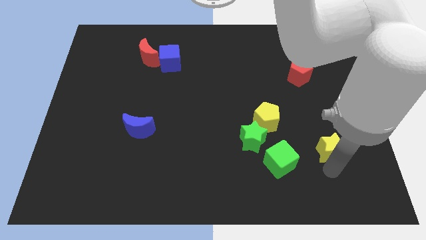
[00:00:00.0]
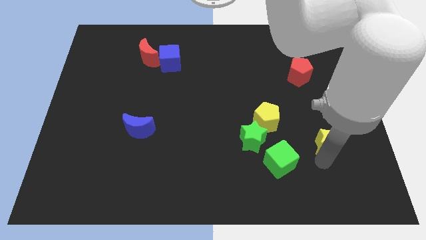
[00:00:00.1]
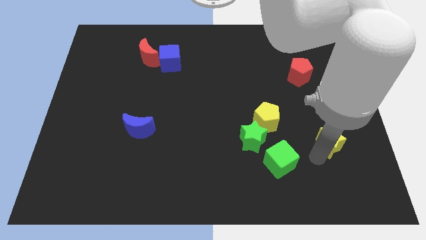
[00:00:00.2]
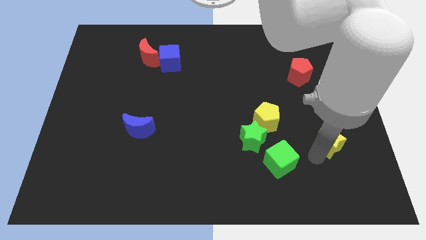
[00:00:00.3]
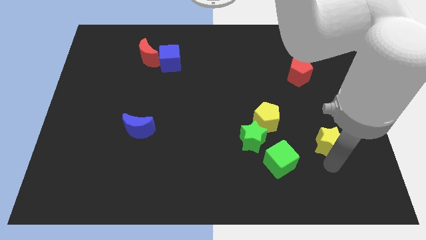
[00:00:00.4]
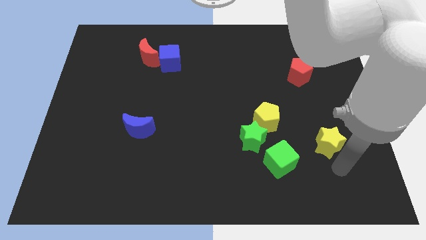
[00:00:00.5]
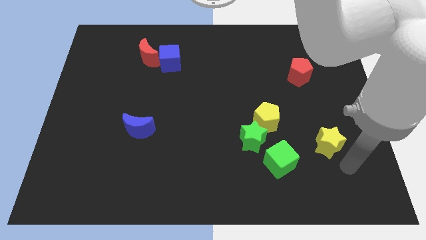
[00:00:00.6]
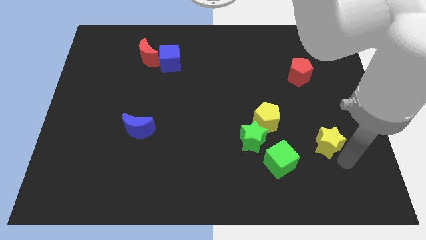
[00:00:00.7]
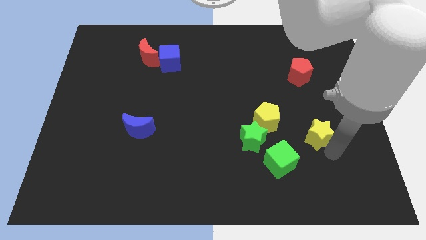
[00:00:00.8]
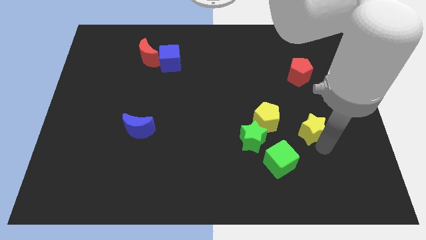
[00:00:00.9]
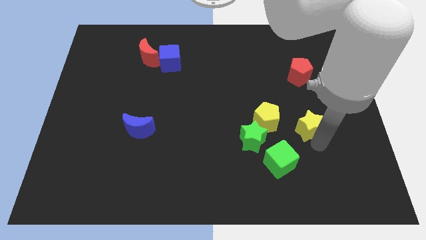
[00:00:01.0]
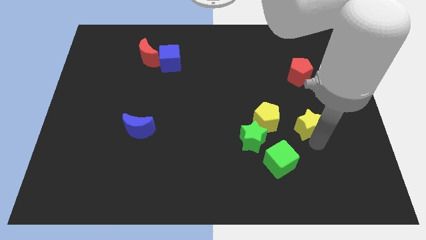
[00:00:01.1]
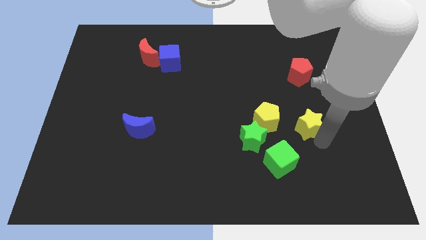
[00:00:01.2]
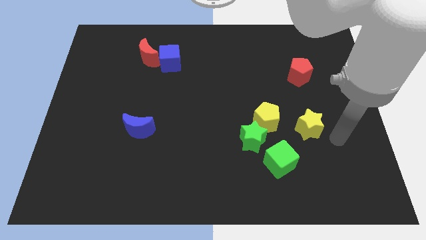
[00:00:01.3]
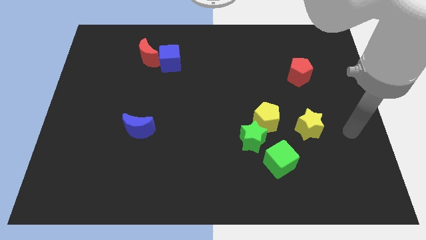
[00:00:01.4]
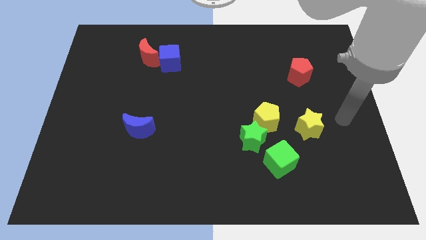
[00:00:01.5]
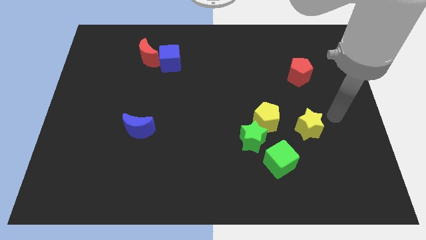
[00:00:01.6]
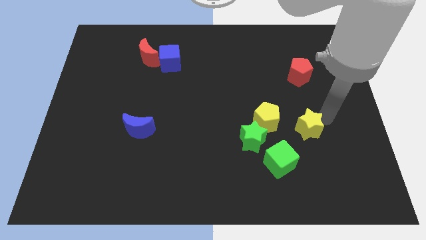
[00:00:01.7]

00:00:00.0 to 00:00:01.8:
move the yellow star below the yellow pentagon

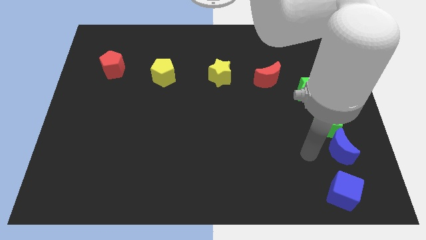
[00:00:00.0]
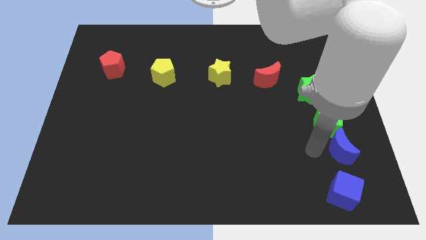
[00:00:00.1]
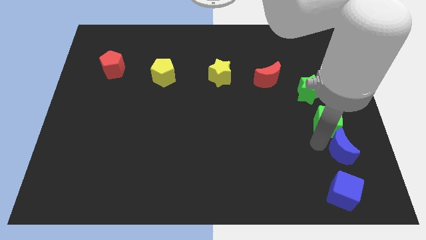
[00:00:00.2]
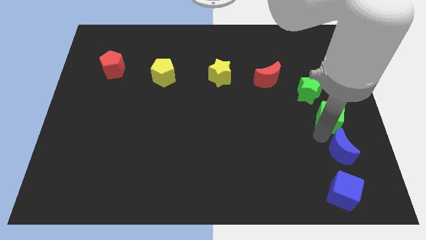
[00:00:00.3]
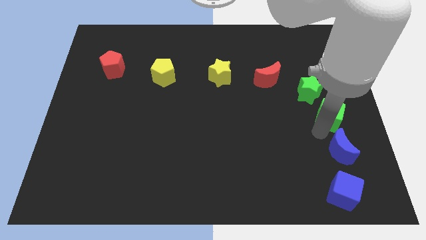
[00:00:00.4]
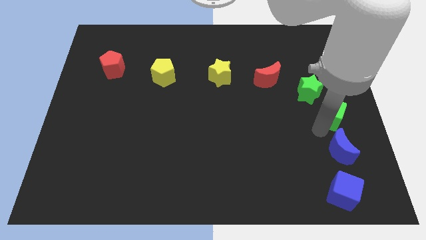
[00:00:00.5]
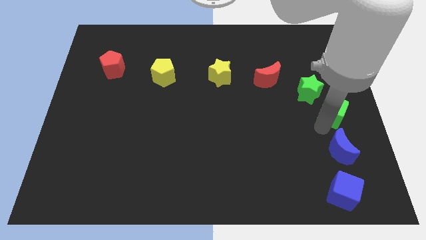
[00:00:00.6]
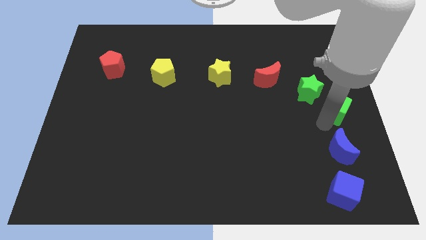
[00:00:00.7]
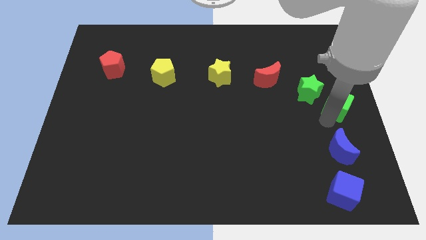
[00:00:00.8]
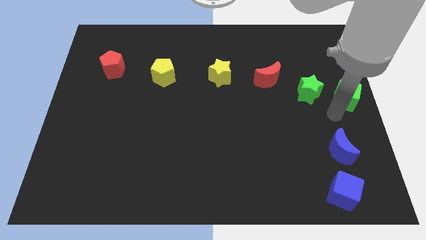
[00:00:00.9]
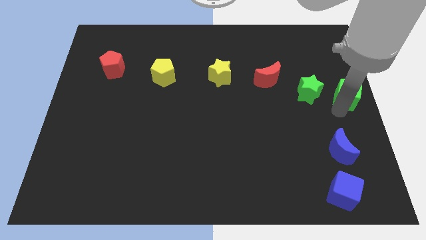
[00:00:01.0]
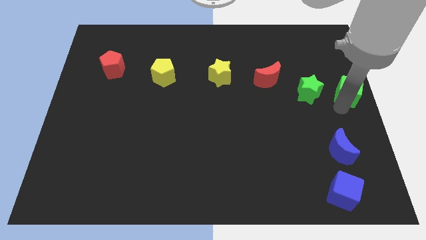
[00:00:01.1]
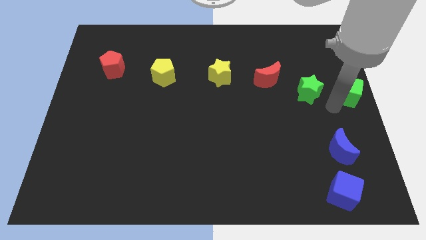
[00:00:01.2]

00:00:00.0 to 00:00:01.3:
place the green cube to the right of the green star

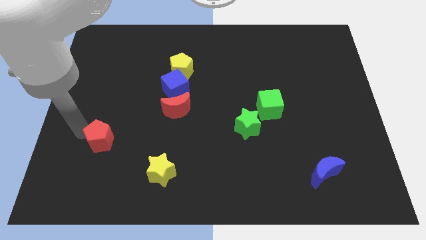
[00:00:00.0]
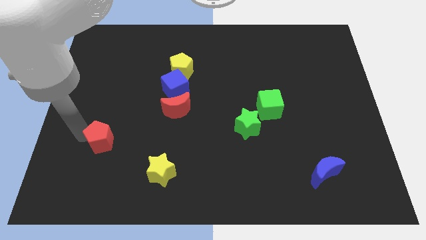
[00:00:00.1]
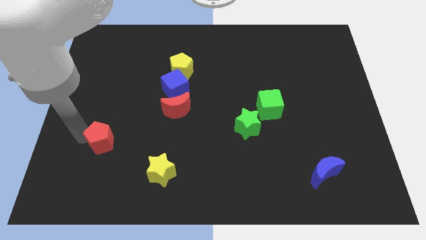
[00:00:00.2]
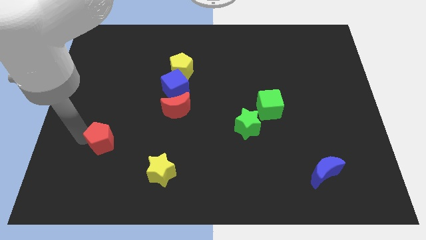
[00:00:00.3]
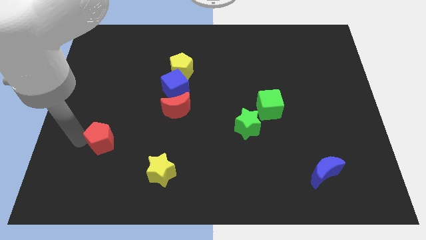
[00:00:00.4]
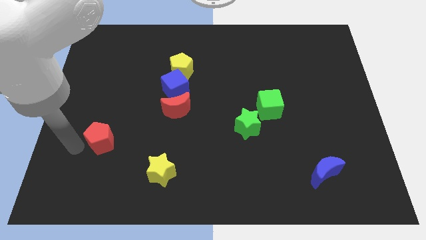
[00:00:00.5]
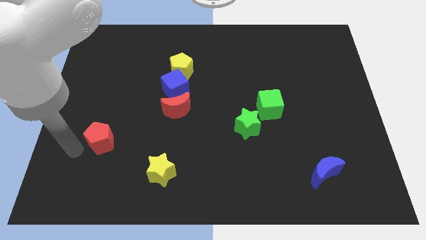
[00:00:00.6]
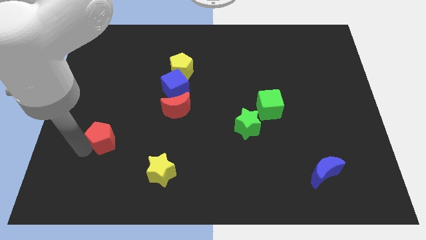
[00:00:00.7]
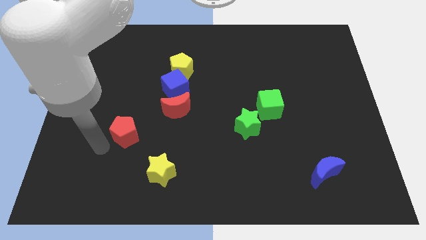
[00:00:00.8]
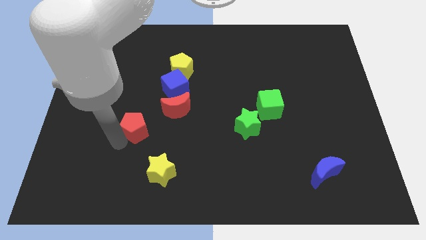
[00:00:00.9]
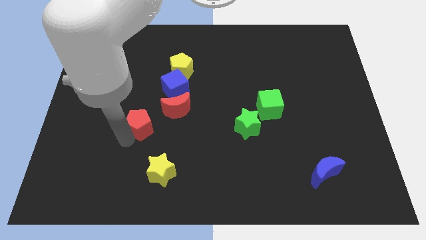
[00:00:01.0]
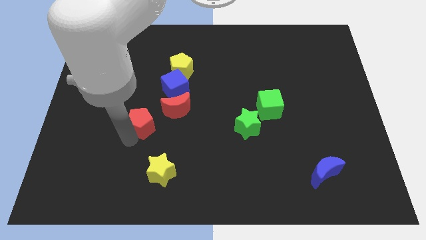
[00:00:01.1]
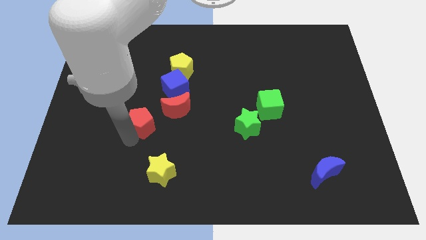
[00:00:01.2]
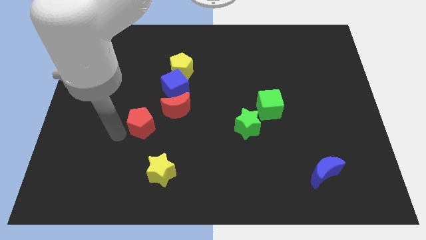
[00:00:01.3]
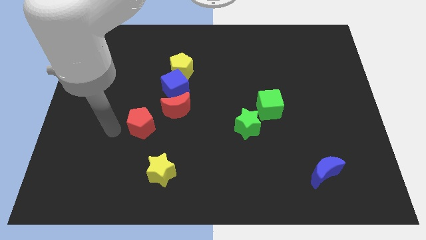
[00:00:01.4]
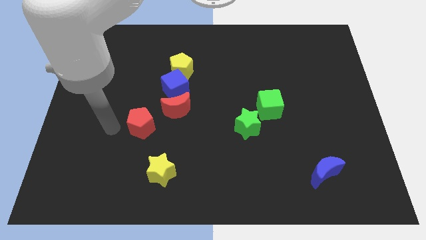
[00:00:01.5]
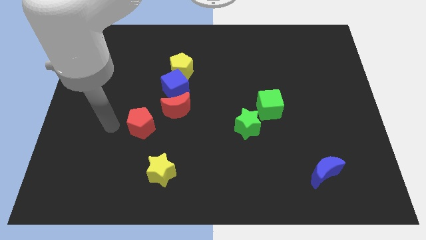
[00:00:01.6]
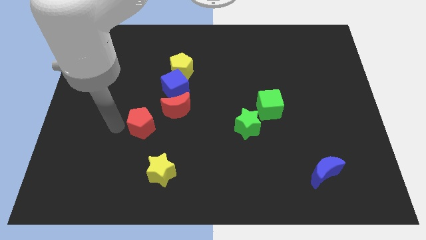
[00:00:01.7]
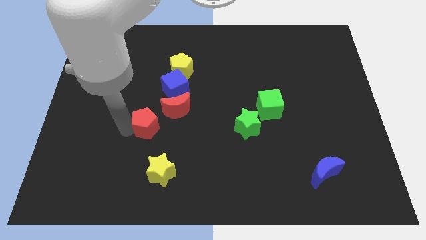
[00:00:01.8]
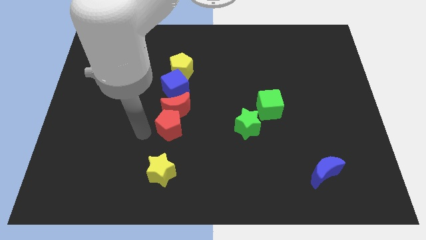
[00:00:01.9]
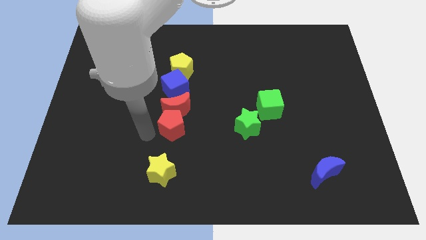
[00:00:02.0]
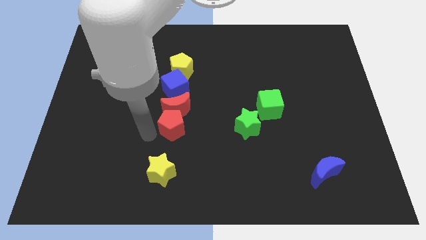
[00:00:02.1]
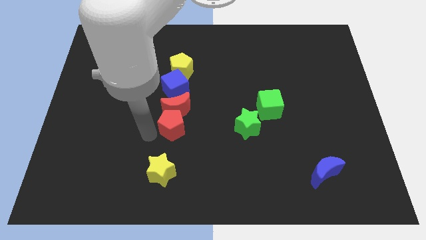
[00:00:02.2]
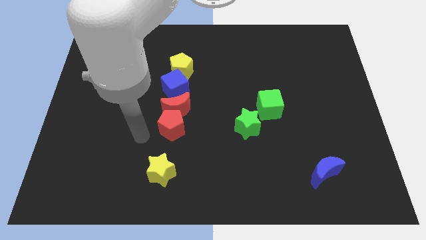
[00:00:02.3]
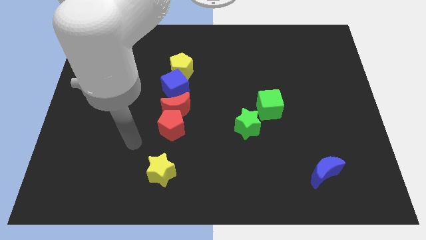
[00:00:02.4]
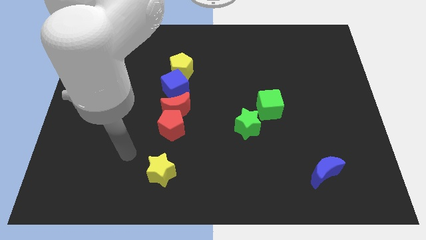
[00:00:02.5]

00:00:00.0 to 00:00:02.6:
move the red pentagon below the red moon

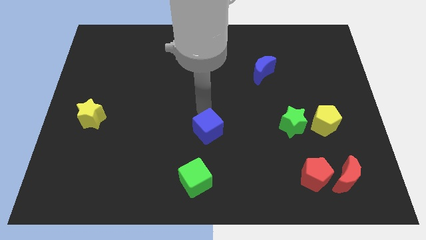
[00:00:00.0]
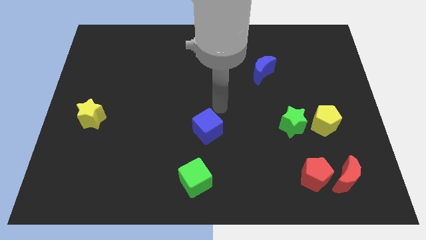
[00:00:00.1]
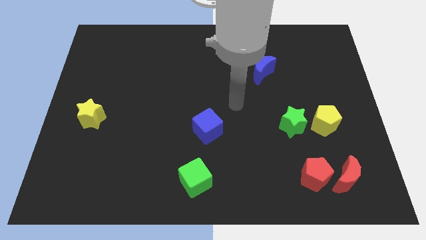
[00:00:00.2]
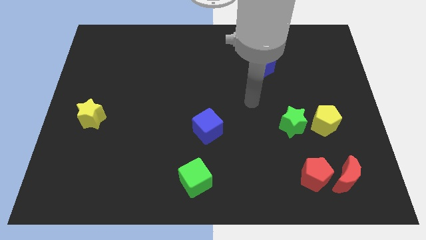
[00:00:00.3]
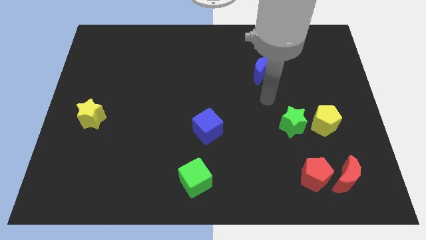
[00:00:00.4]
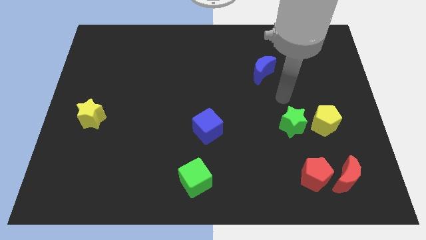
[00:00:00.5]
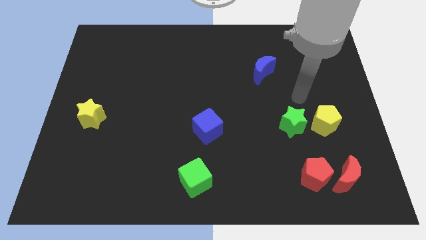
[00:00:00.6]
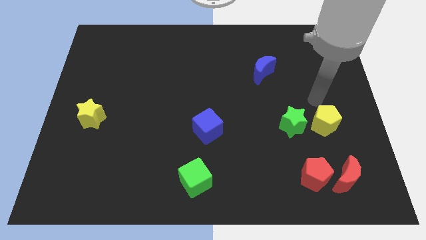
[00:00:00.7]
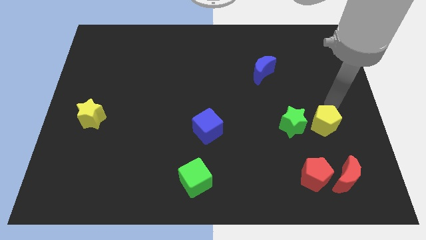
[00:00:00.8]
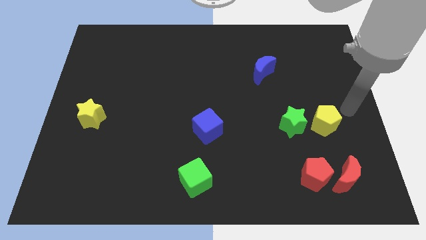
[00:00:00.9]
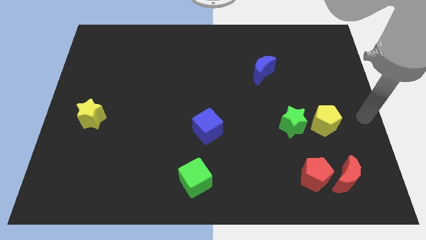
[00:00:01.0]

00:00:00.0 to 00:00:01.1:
place your hand at right center of the board

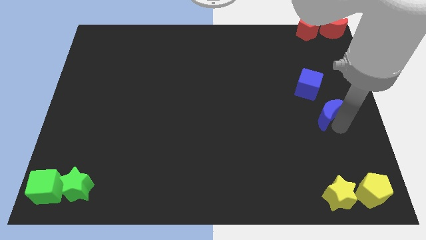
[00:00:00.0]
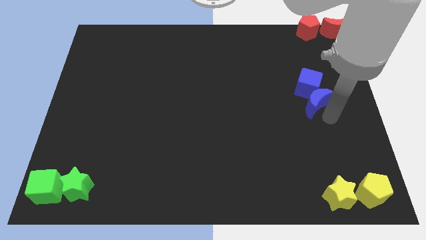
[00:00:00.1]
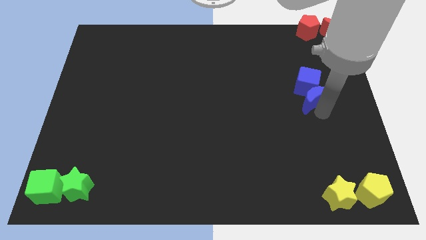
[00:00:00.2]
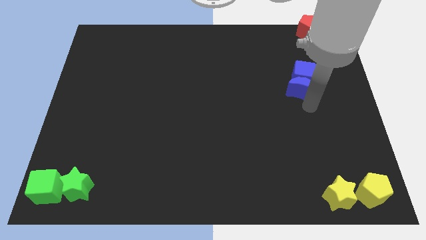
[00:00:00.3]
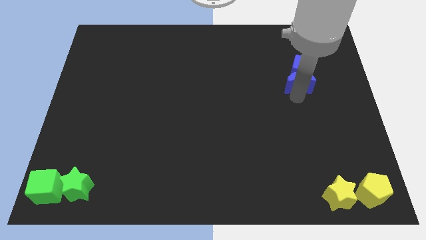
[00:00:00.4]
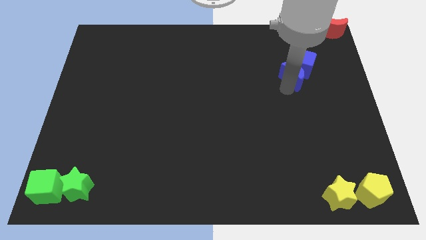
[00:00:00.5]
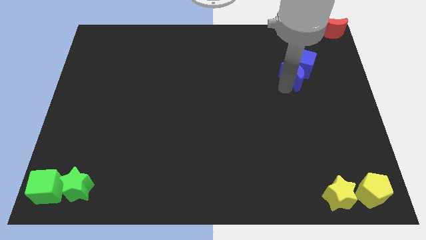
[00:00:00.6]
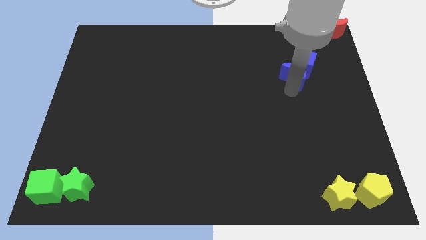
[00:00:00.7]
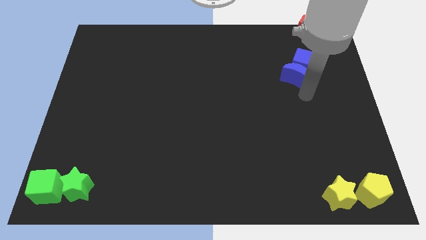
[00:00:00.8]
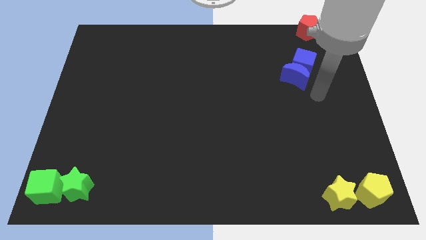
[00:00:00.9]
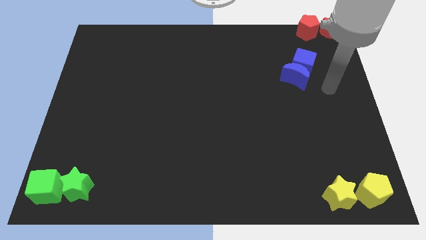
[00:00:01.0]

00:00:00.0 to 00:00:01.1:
push the blue crescent into the blue cube

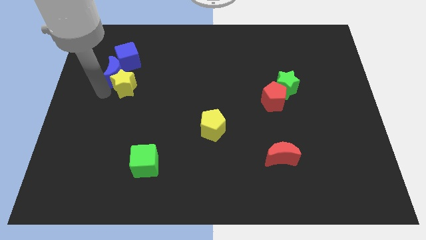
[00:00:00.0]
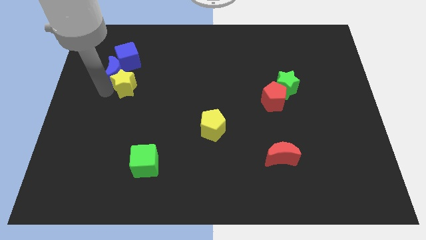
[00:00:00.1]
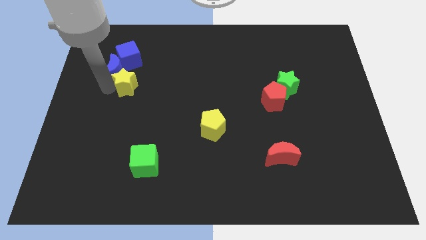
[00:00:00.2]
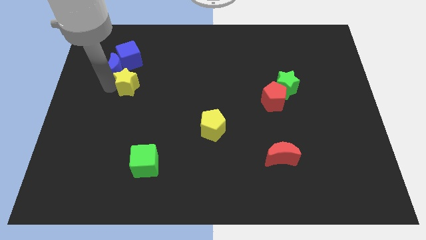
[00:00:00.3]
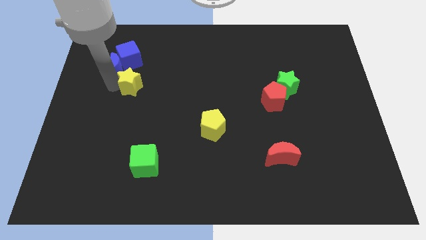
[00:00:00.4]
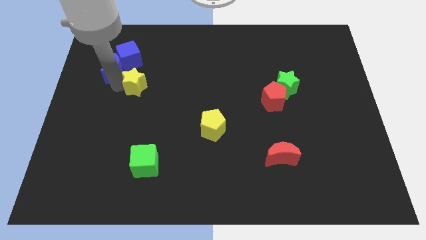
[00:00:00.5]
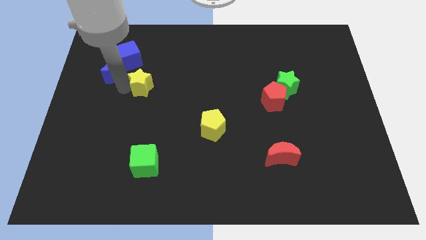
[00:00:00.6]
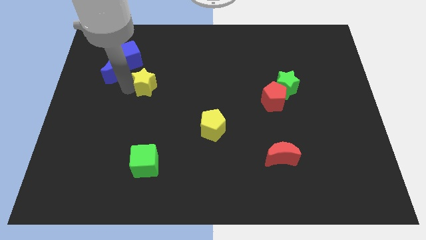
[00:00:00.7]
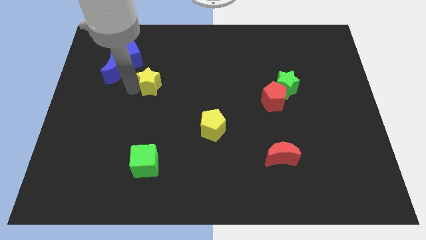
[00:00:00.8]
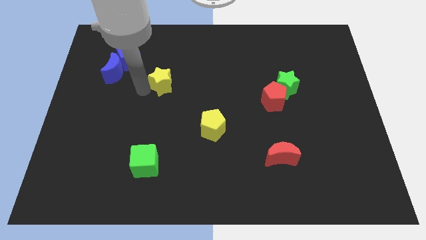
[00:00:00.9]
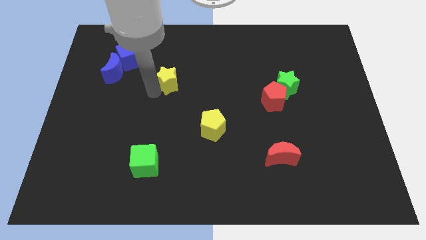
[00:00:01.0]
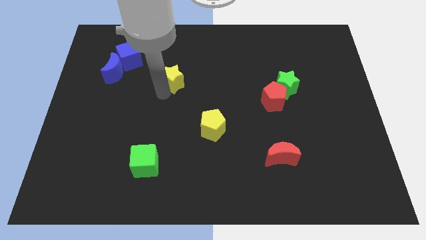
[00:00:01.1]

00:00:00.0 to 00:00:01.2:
separate the yellow star from the blue blocks
